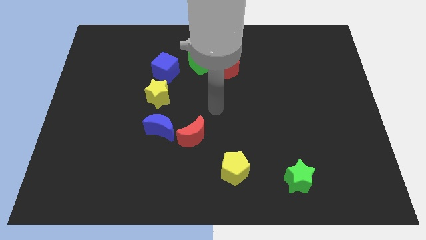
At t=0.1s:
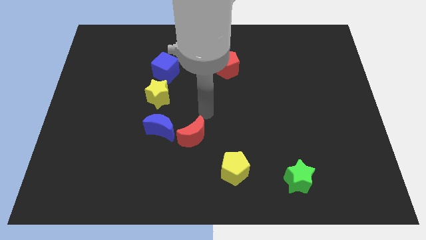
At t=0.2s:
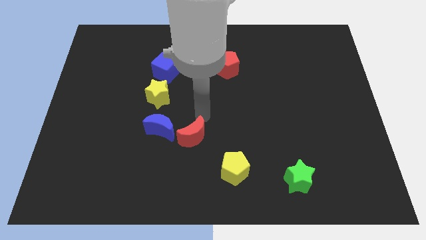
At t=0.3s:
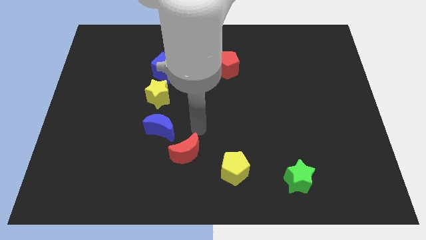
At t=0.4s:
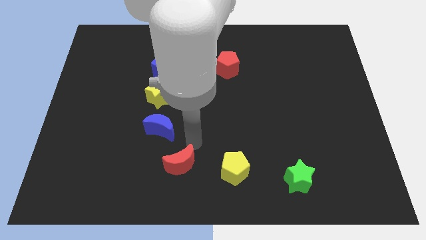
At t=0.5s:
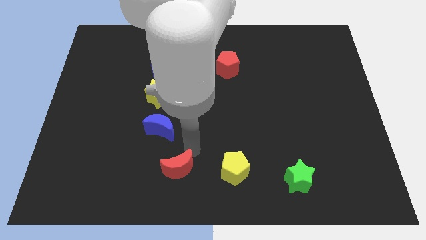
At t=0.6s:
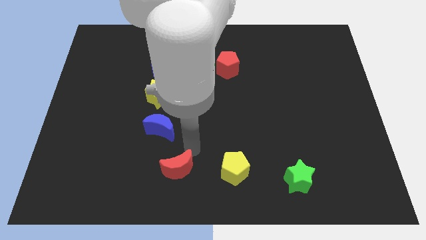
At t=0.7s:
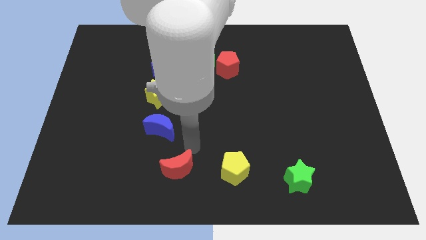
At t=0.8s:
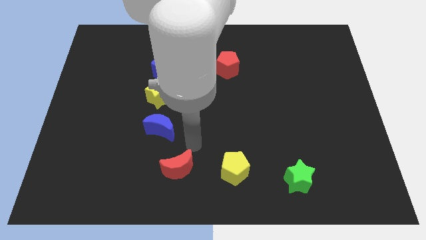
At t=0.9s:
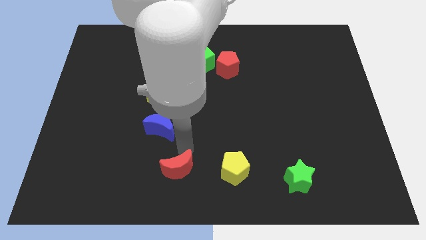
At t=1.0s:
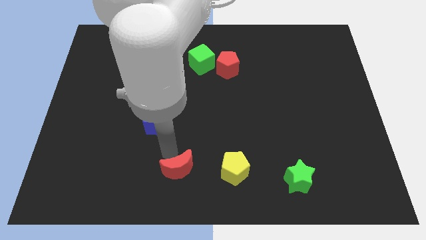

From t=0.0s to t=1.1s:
move the red crescent parallel to the left side of the blue moon

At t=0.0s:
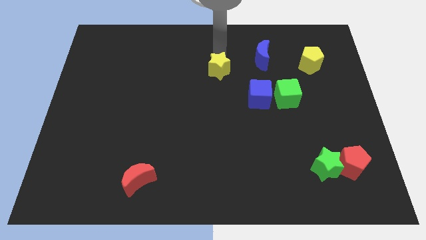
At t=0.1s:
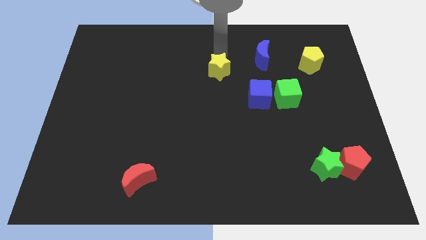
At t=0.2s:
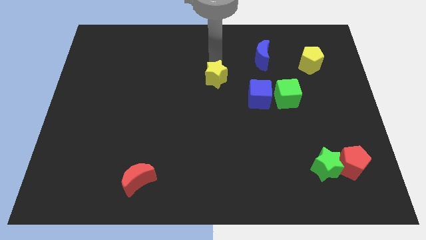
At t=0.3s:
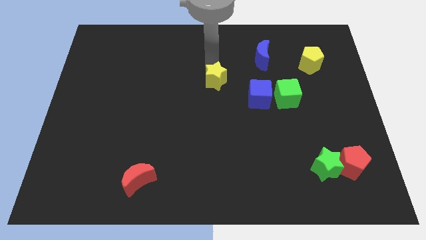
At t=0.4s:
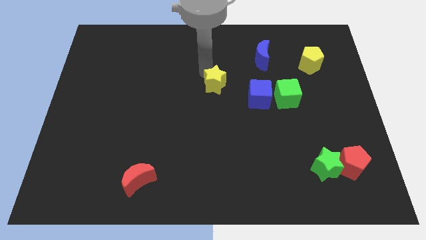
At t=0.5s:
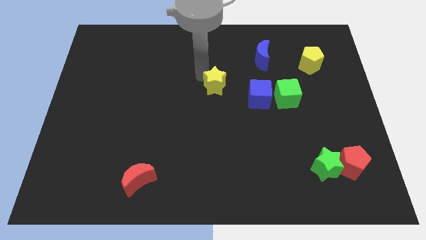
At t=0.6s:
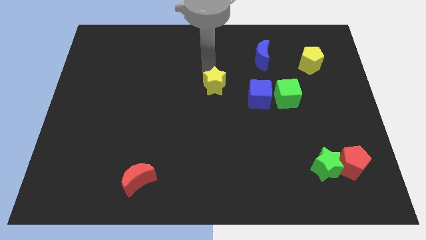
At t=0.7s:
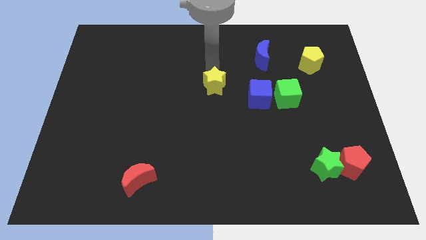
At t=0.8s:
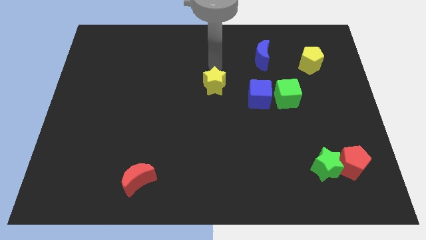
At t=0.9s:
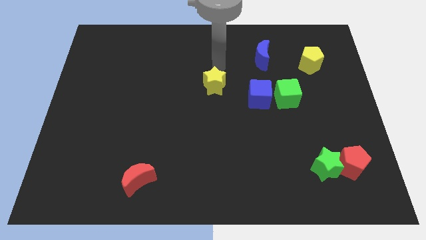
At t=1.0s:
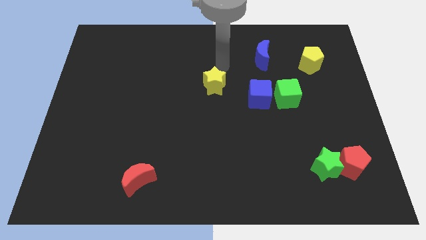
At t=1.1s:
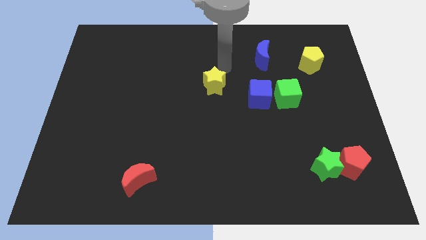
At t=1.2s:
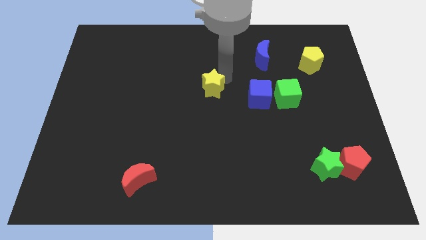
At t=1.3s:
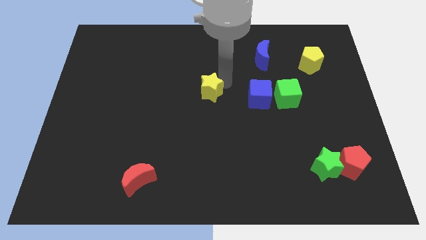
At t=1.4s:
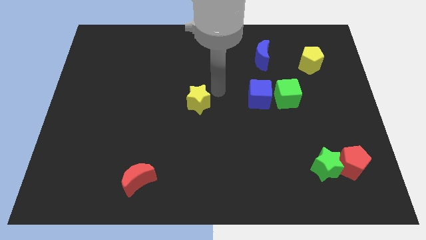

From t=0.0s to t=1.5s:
push the yellow star to the center of the board

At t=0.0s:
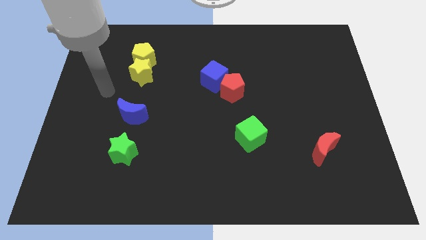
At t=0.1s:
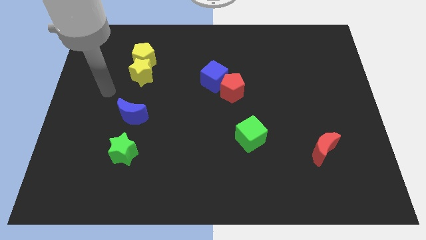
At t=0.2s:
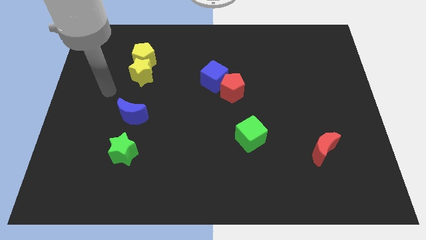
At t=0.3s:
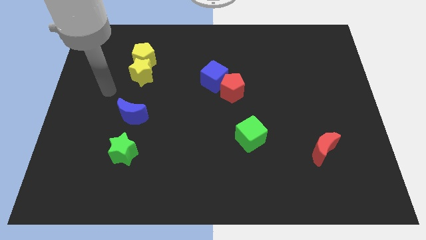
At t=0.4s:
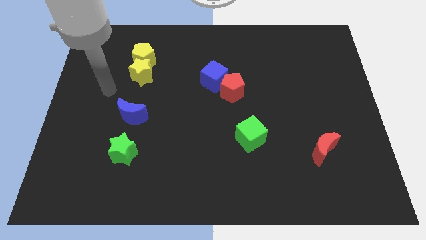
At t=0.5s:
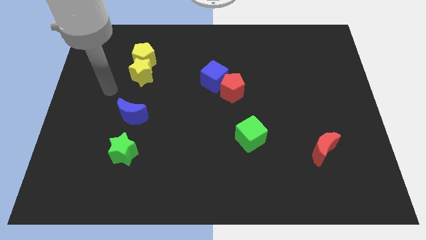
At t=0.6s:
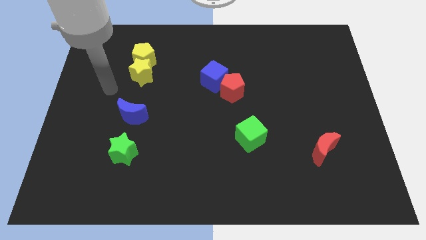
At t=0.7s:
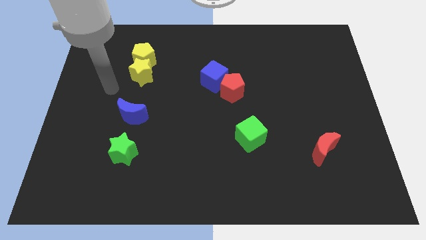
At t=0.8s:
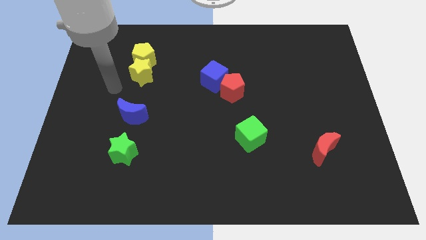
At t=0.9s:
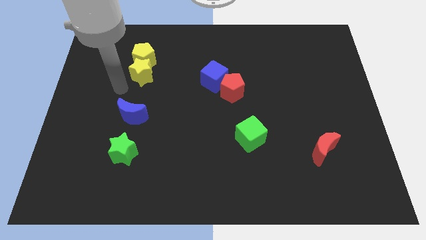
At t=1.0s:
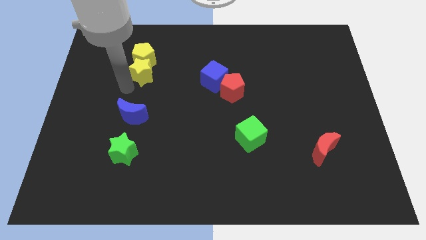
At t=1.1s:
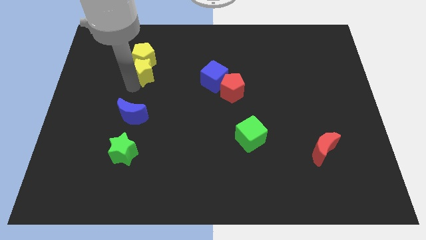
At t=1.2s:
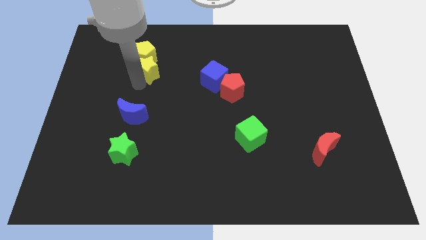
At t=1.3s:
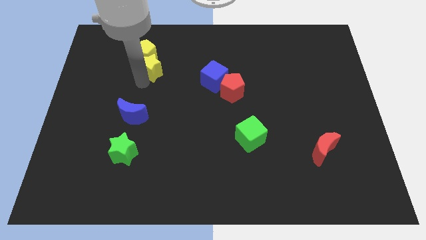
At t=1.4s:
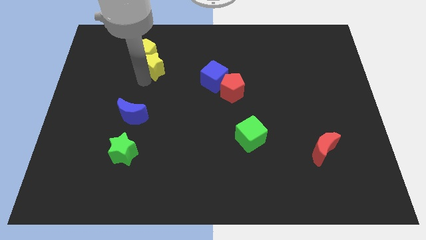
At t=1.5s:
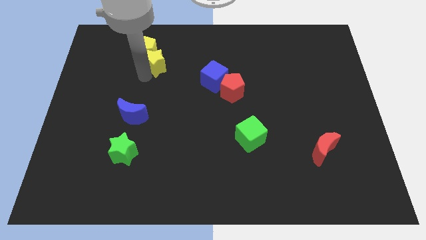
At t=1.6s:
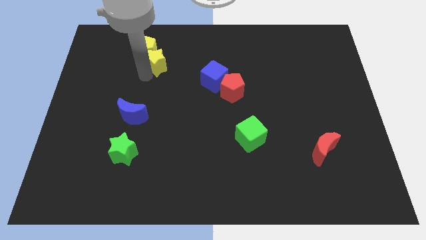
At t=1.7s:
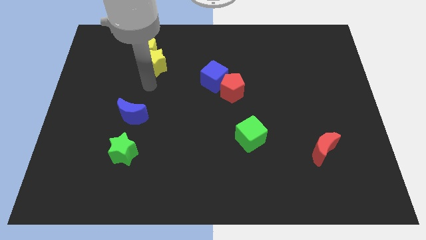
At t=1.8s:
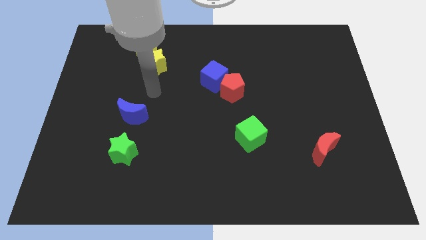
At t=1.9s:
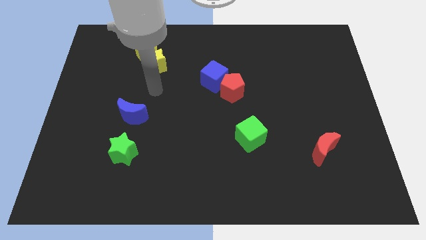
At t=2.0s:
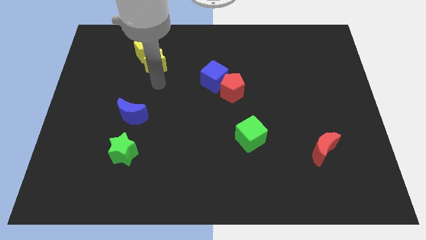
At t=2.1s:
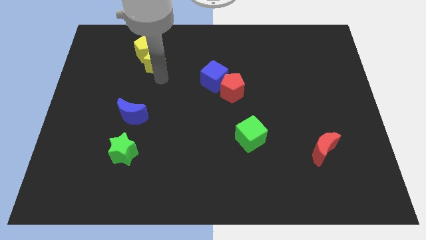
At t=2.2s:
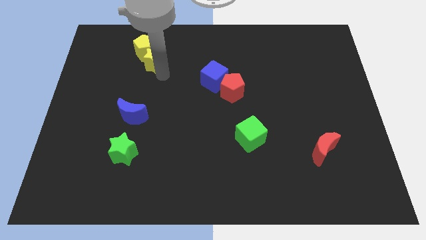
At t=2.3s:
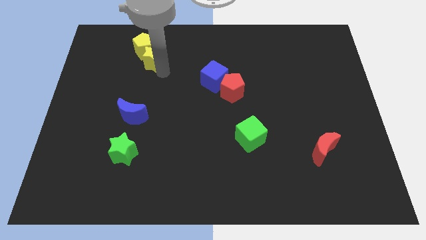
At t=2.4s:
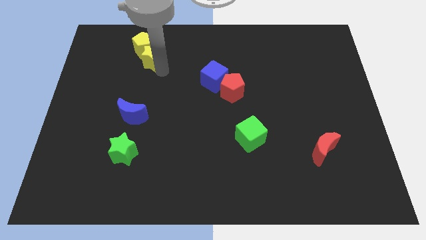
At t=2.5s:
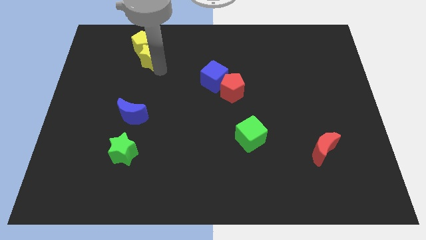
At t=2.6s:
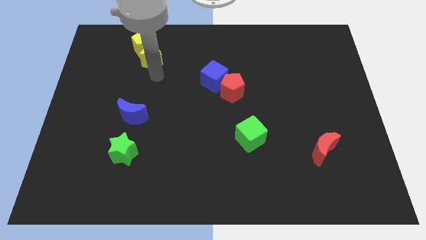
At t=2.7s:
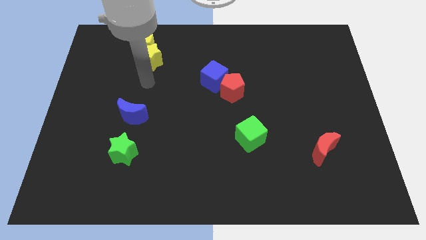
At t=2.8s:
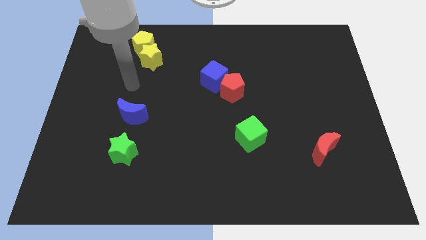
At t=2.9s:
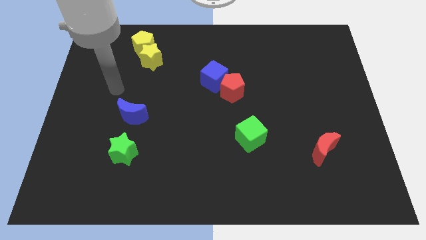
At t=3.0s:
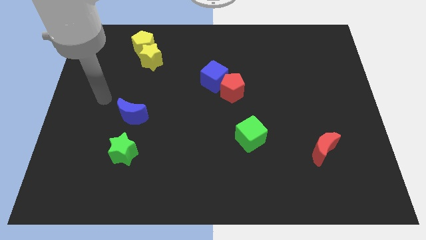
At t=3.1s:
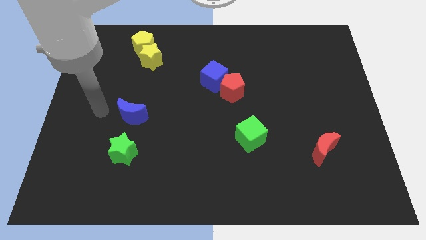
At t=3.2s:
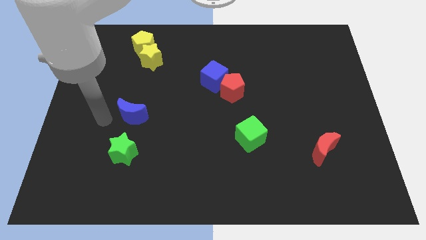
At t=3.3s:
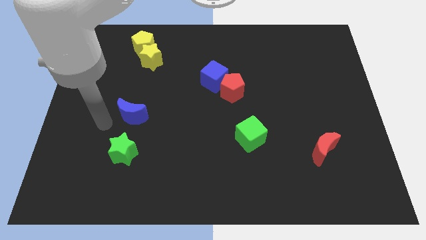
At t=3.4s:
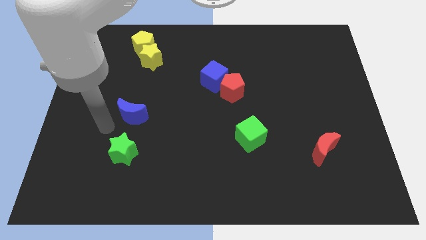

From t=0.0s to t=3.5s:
move yellow star and yellow pentagon to the top of the board

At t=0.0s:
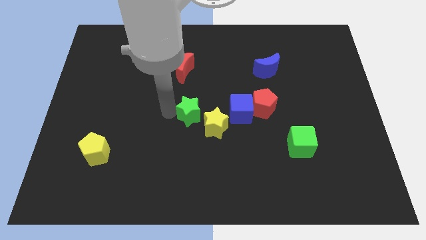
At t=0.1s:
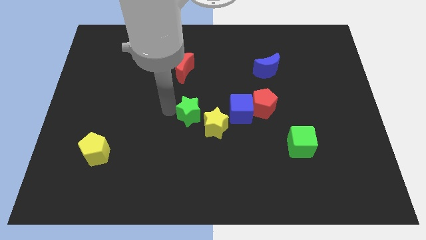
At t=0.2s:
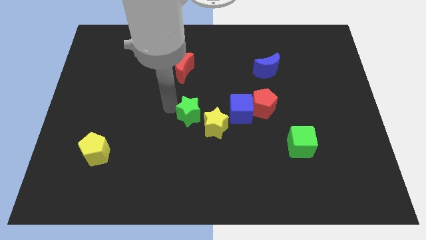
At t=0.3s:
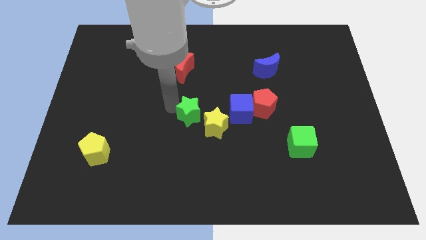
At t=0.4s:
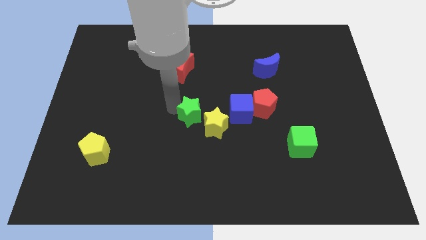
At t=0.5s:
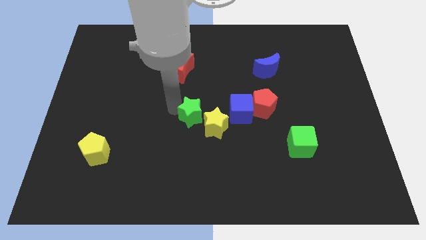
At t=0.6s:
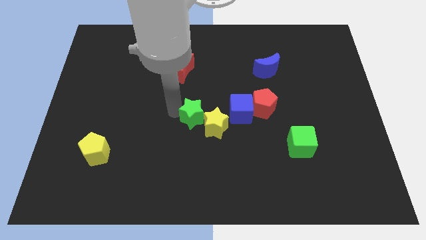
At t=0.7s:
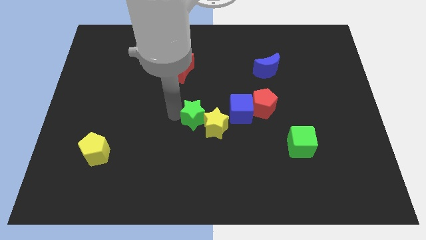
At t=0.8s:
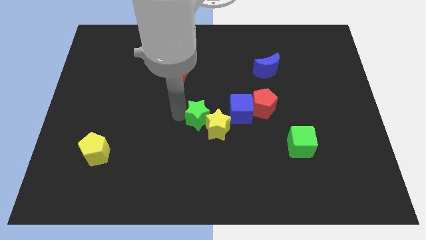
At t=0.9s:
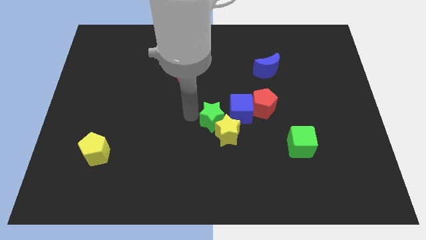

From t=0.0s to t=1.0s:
push green star into yellow star

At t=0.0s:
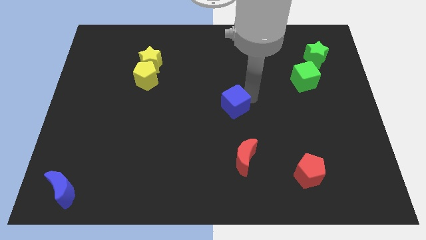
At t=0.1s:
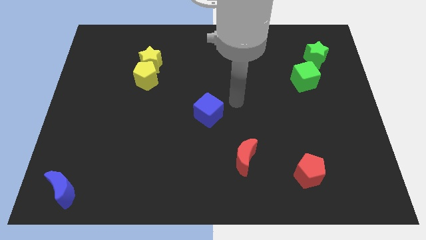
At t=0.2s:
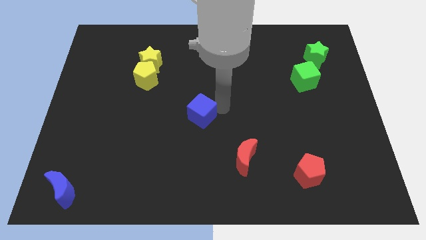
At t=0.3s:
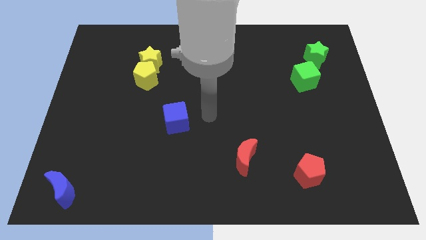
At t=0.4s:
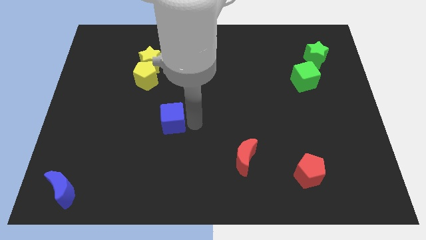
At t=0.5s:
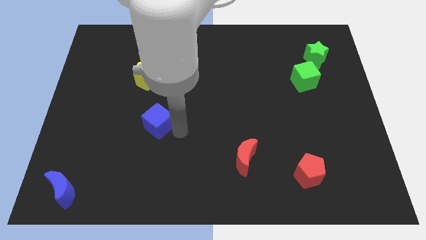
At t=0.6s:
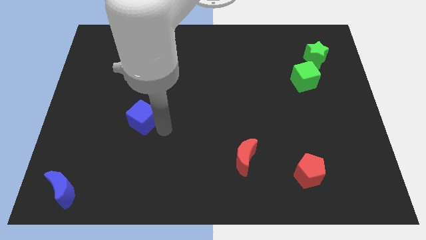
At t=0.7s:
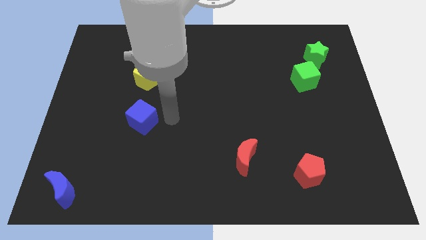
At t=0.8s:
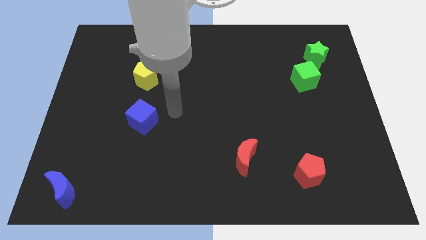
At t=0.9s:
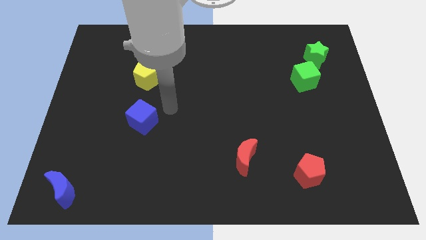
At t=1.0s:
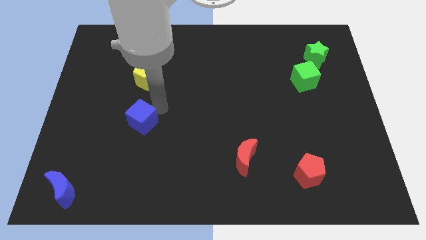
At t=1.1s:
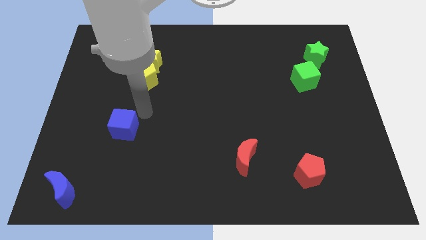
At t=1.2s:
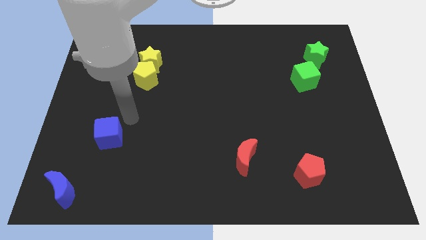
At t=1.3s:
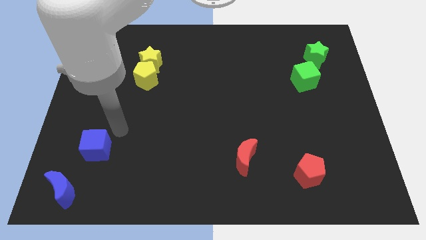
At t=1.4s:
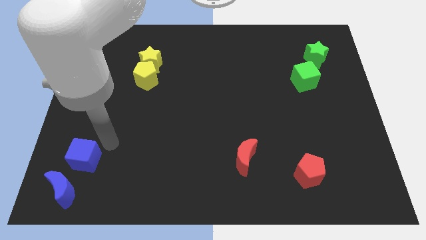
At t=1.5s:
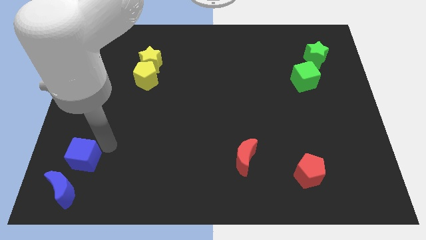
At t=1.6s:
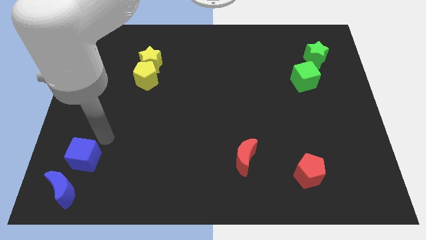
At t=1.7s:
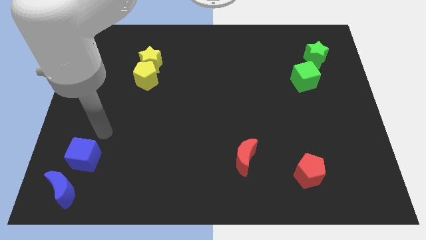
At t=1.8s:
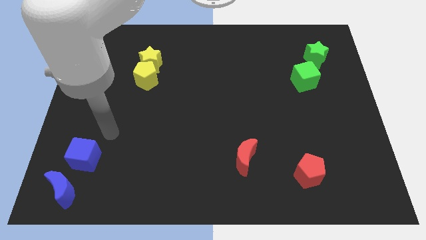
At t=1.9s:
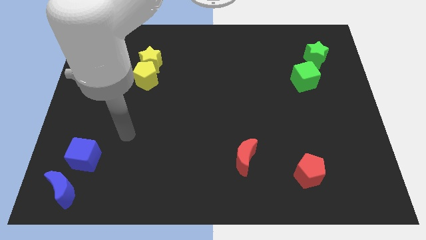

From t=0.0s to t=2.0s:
drag blue cube to the top right of the blue moon
